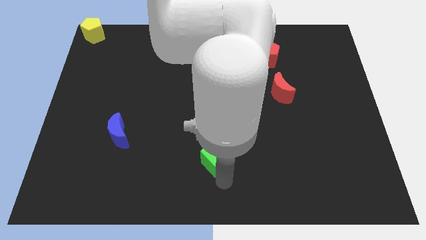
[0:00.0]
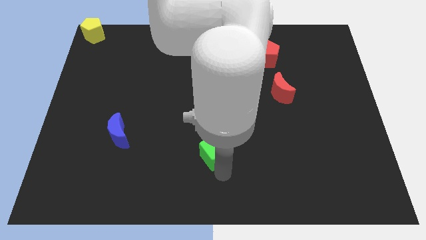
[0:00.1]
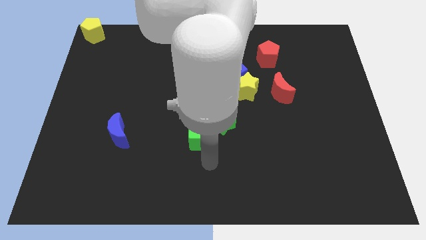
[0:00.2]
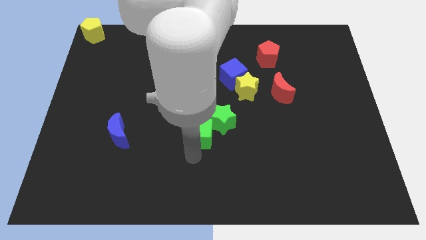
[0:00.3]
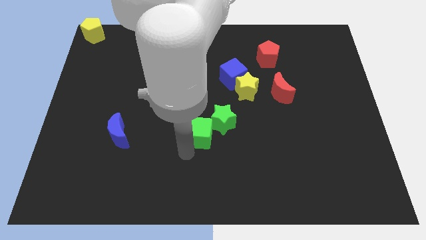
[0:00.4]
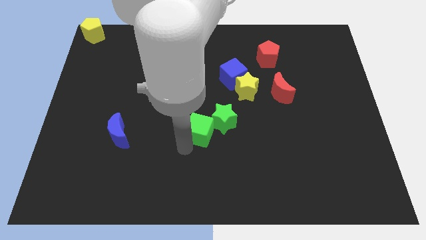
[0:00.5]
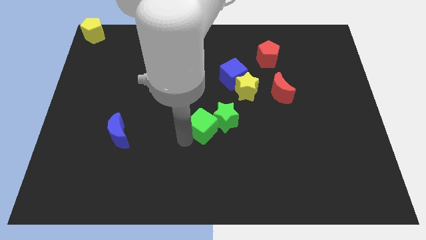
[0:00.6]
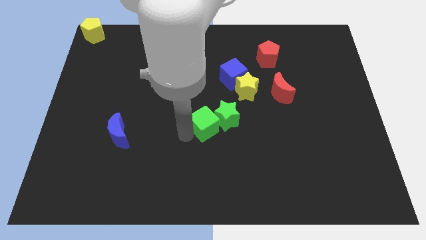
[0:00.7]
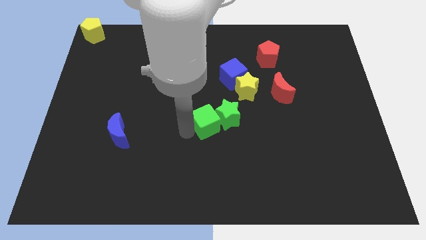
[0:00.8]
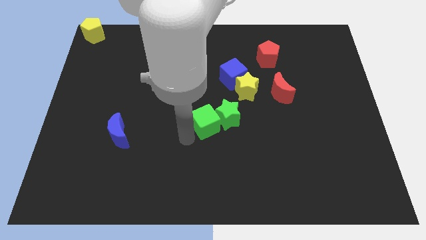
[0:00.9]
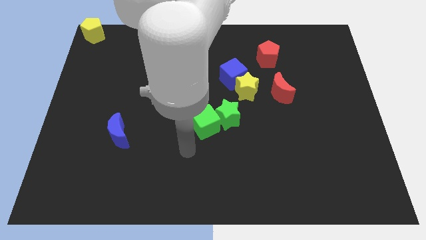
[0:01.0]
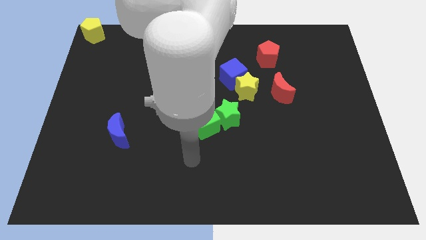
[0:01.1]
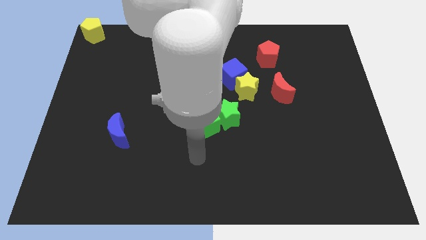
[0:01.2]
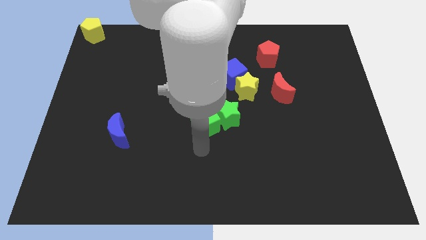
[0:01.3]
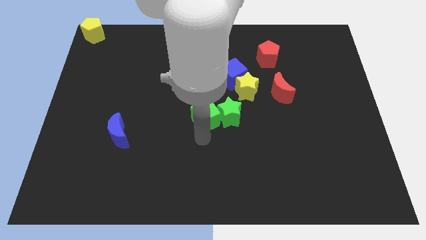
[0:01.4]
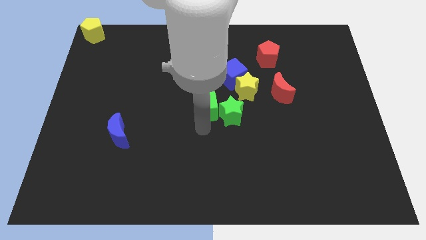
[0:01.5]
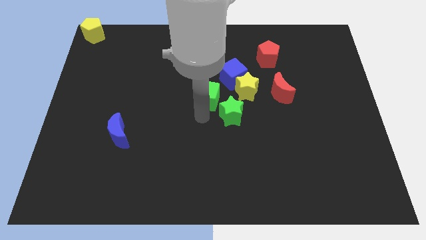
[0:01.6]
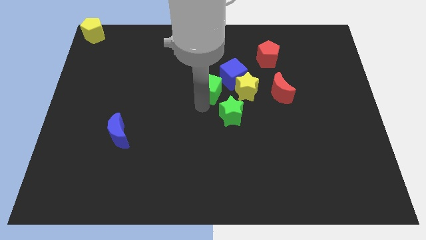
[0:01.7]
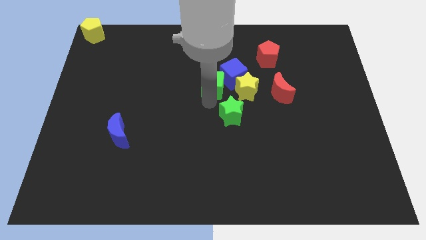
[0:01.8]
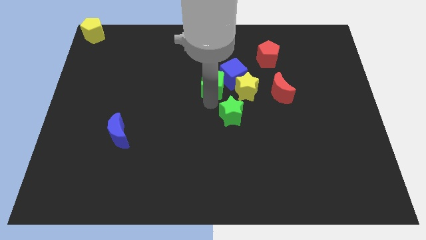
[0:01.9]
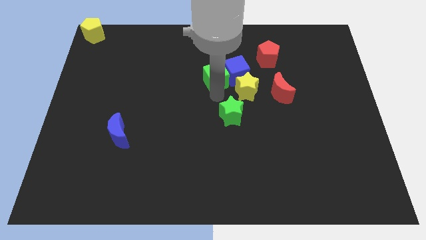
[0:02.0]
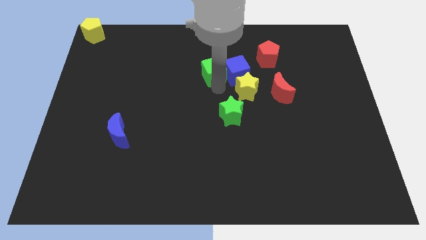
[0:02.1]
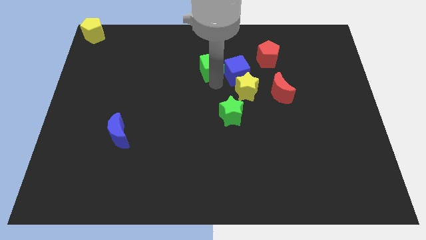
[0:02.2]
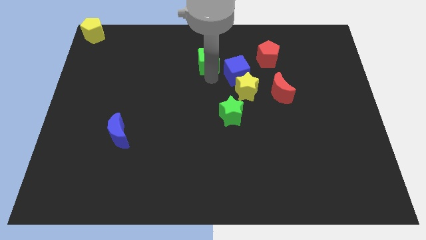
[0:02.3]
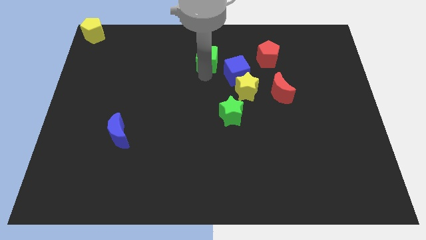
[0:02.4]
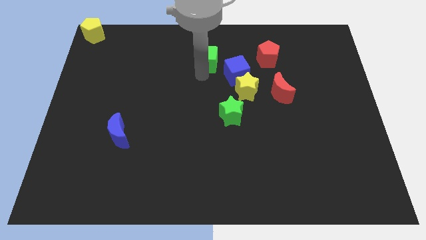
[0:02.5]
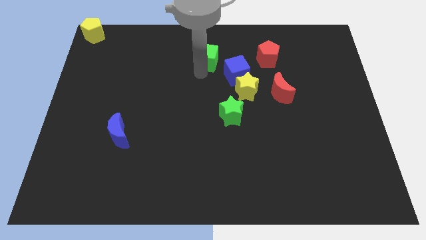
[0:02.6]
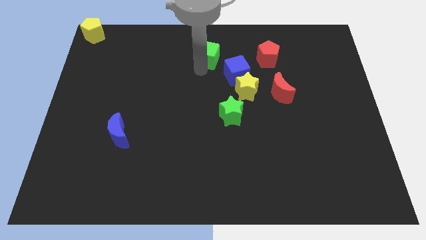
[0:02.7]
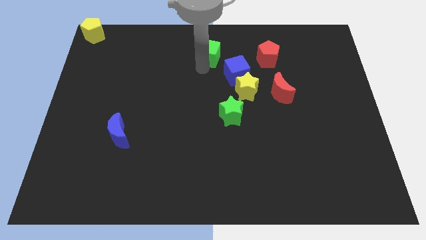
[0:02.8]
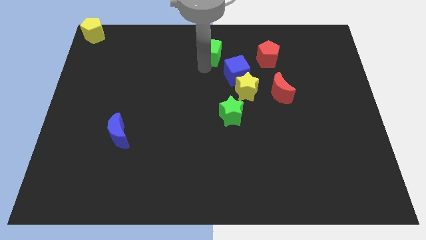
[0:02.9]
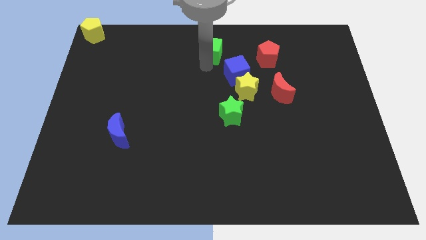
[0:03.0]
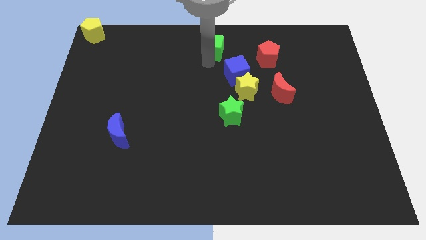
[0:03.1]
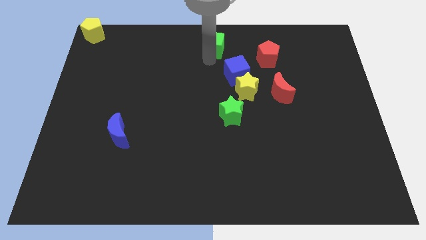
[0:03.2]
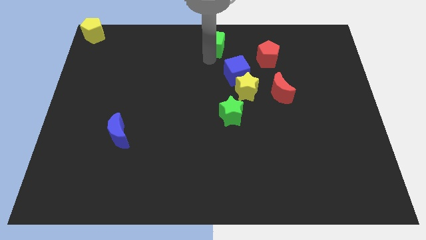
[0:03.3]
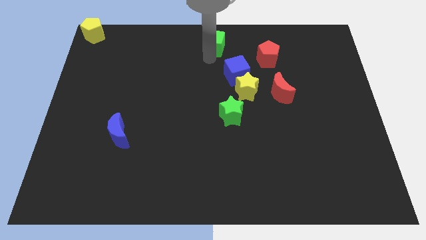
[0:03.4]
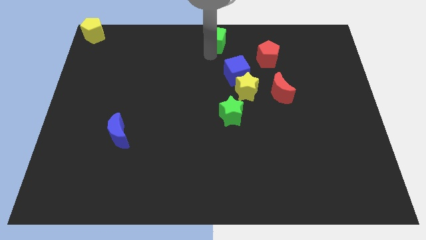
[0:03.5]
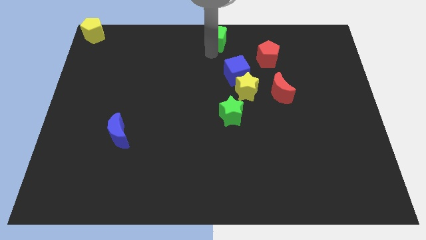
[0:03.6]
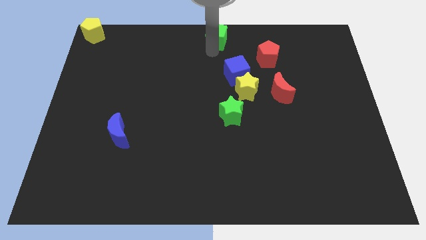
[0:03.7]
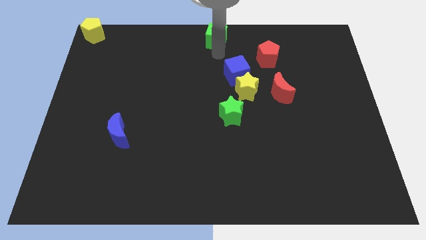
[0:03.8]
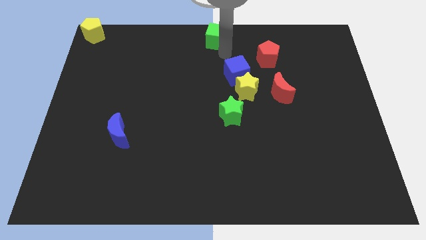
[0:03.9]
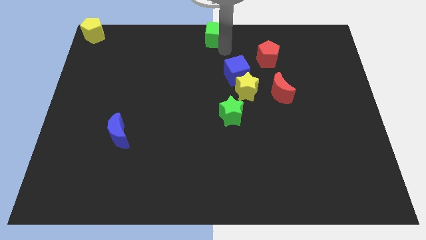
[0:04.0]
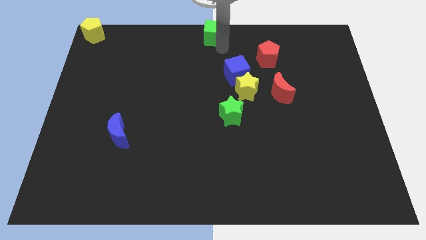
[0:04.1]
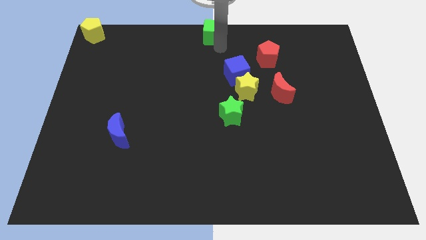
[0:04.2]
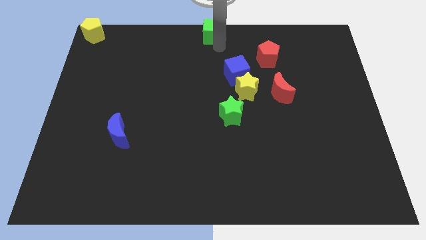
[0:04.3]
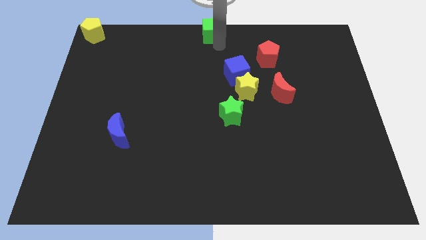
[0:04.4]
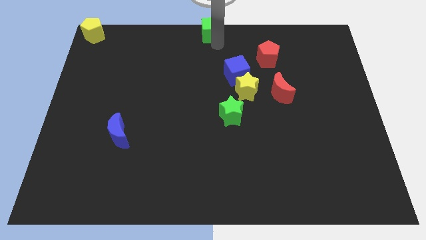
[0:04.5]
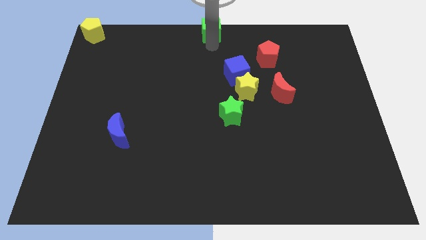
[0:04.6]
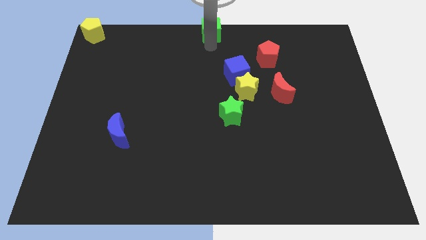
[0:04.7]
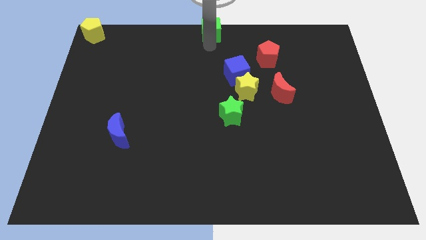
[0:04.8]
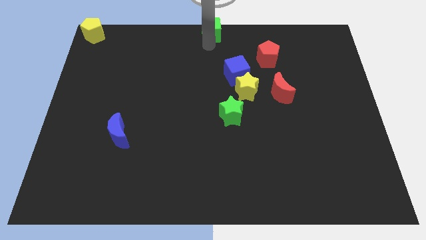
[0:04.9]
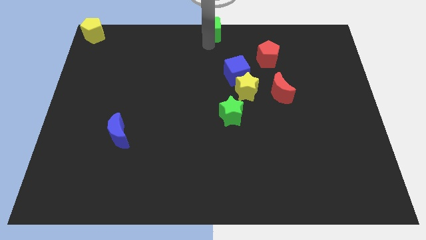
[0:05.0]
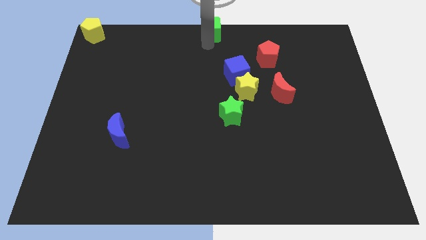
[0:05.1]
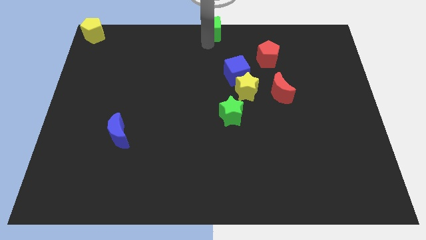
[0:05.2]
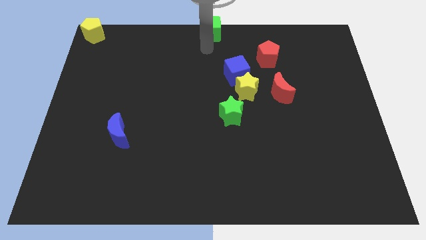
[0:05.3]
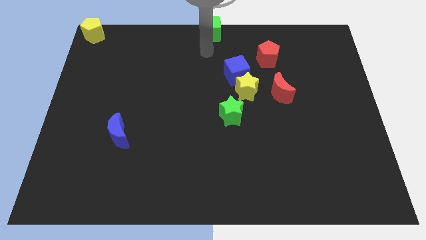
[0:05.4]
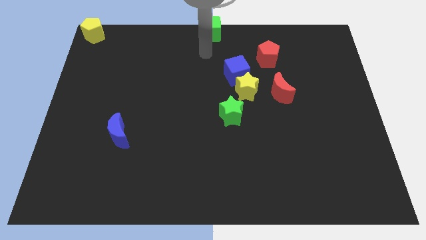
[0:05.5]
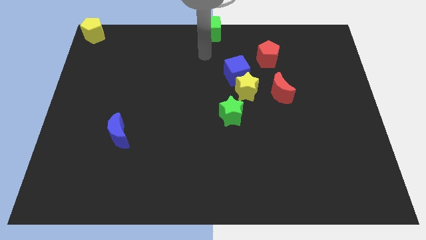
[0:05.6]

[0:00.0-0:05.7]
move the green cube to the top center of the board

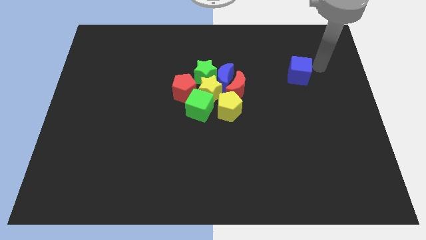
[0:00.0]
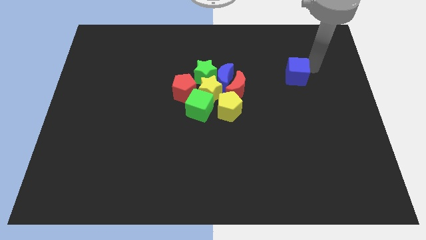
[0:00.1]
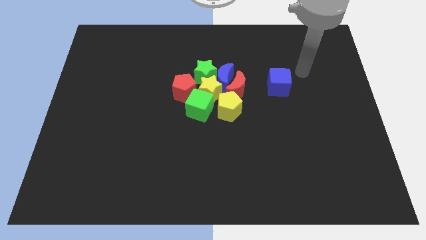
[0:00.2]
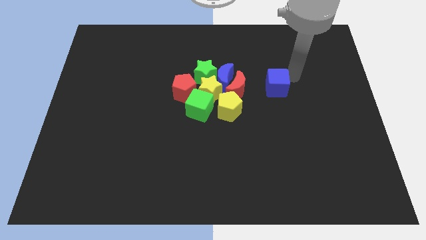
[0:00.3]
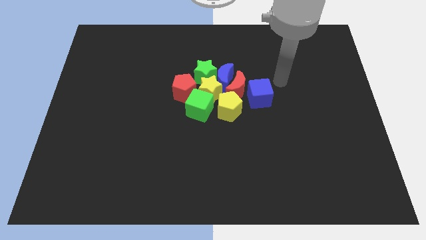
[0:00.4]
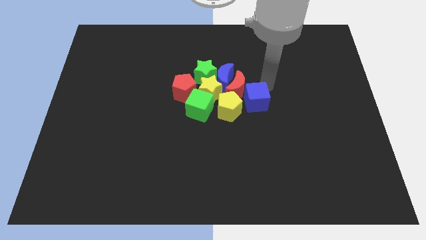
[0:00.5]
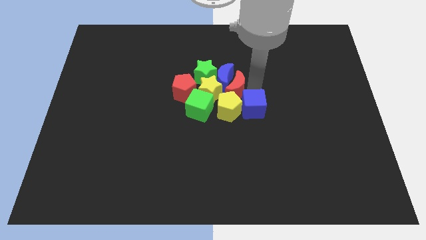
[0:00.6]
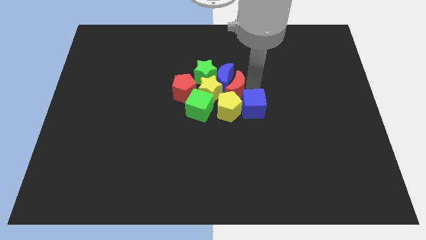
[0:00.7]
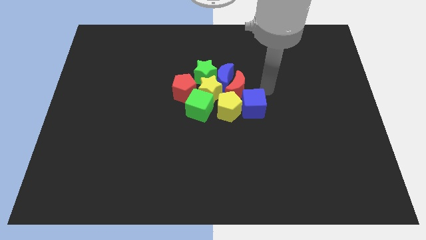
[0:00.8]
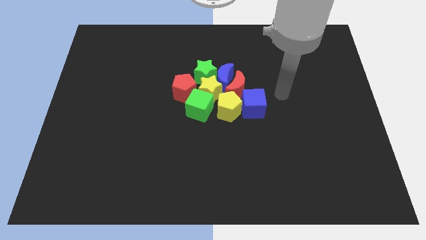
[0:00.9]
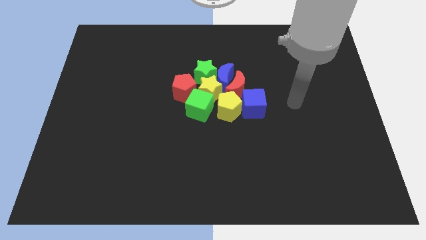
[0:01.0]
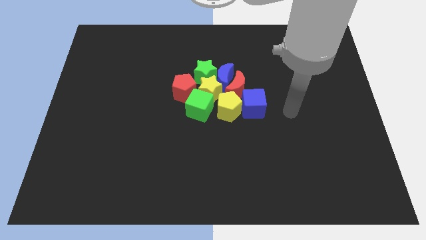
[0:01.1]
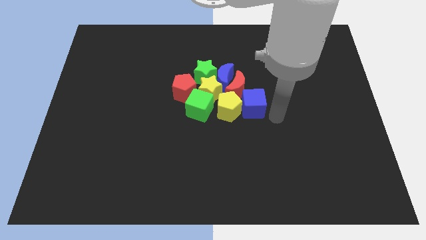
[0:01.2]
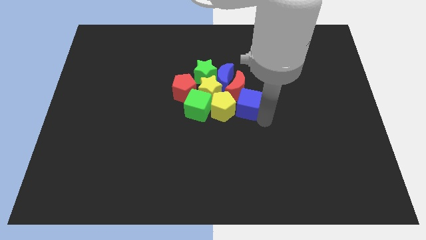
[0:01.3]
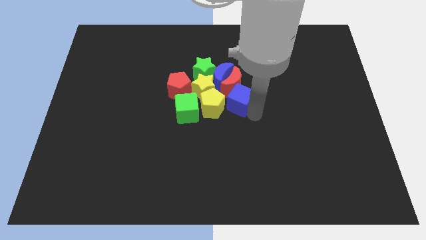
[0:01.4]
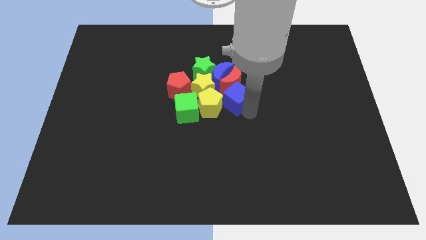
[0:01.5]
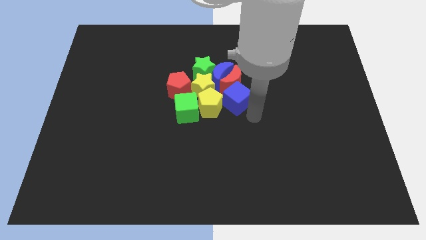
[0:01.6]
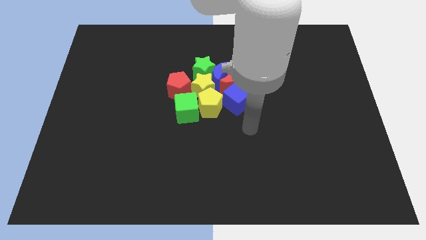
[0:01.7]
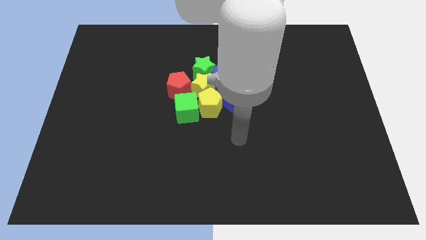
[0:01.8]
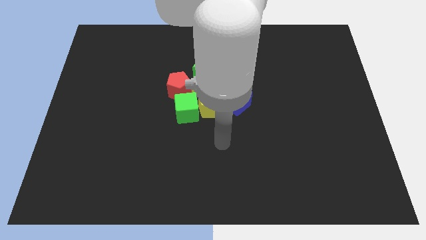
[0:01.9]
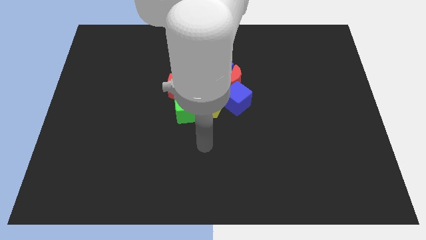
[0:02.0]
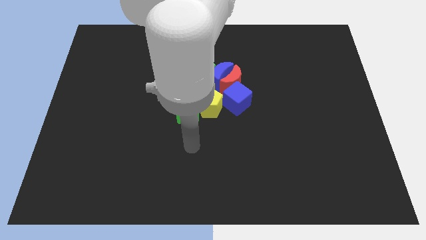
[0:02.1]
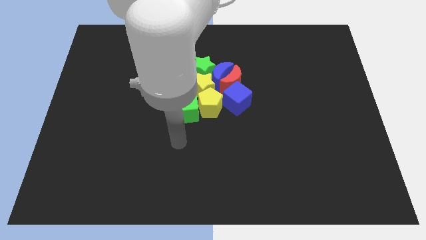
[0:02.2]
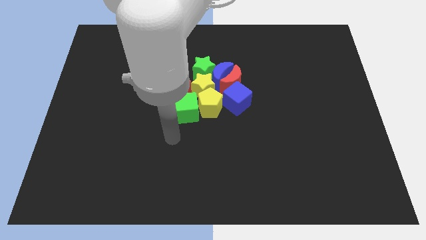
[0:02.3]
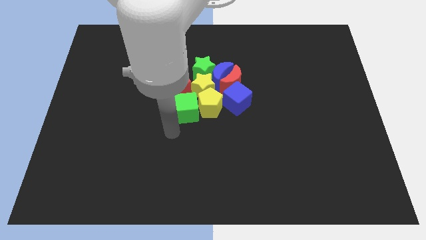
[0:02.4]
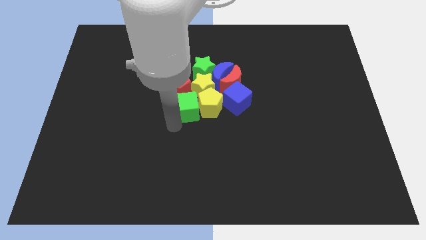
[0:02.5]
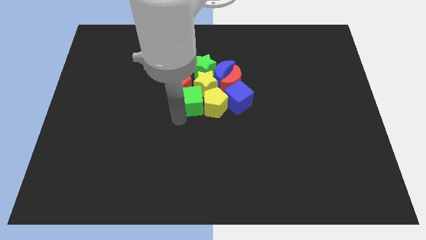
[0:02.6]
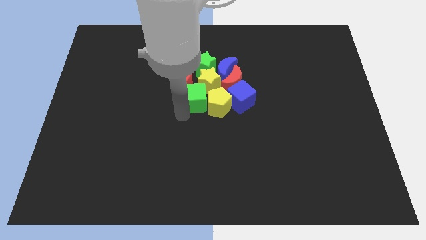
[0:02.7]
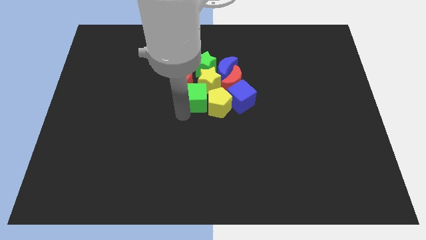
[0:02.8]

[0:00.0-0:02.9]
push the green cube into the group of blocks

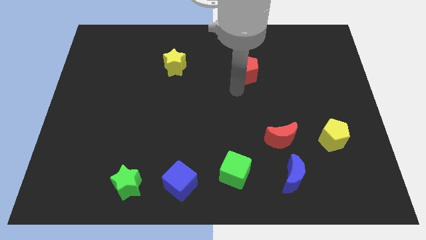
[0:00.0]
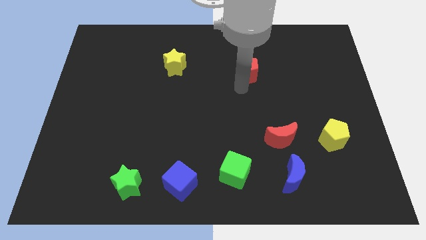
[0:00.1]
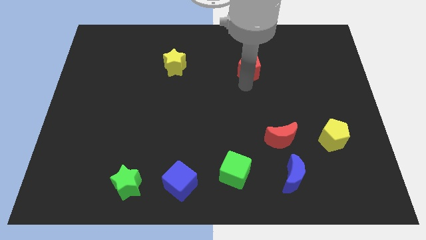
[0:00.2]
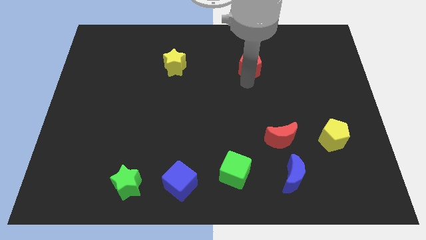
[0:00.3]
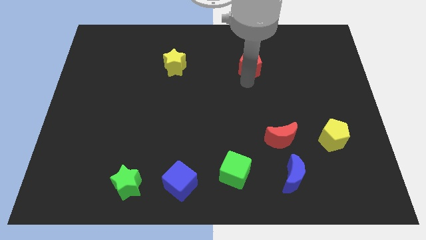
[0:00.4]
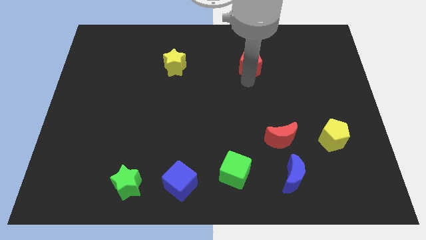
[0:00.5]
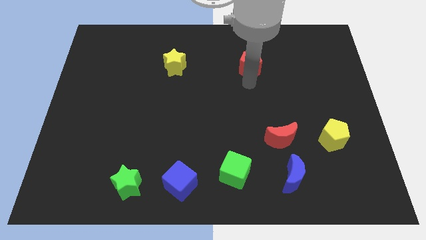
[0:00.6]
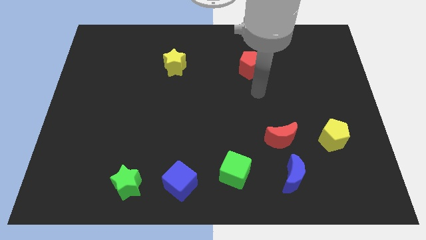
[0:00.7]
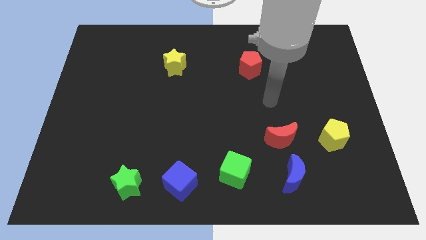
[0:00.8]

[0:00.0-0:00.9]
slide the red pentagon towards the top center of the board
